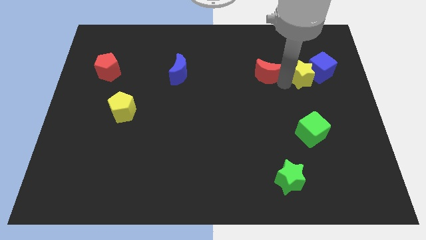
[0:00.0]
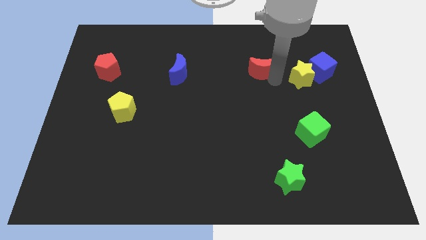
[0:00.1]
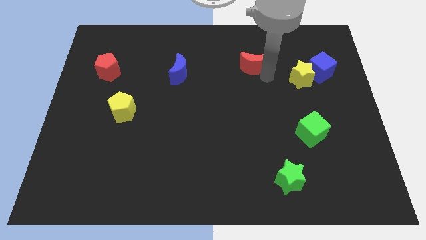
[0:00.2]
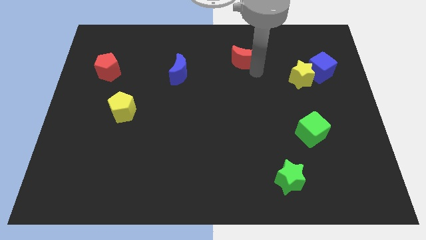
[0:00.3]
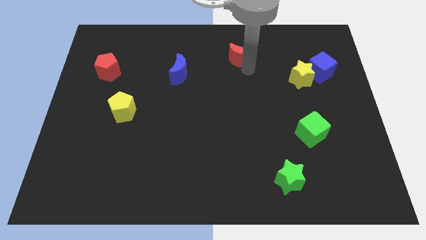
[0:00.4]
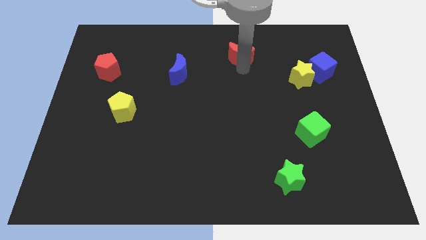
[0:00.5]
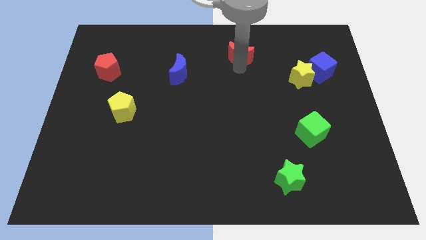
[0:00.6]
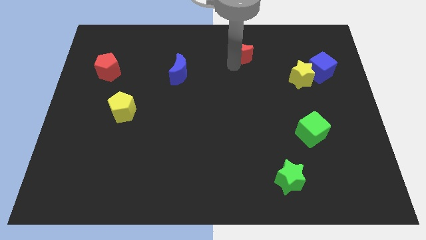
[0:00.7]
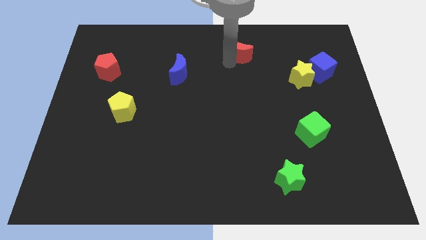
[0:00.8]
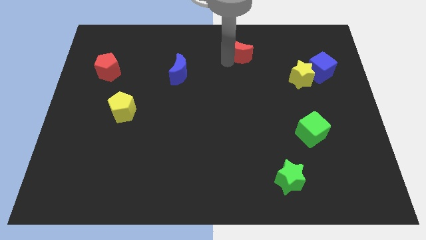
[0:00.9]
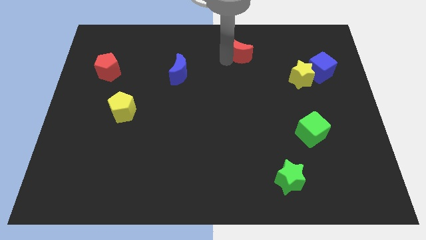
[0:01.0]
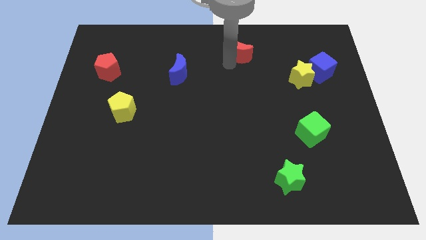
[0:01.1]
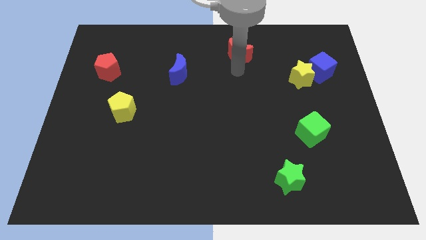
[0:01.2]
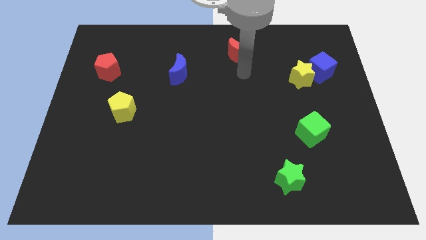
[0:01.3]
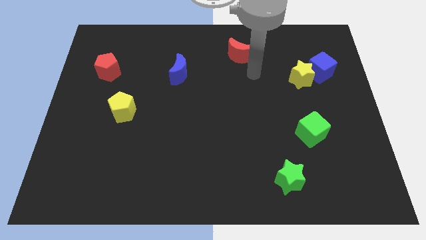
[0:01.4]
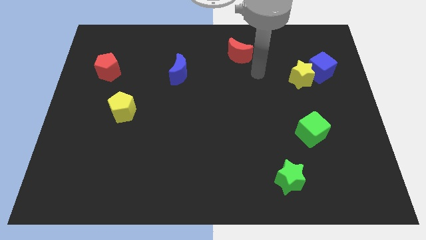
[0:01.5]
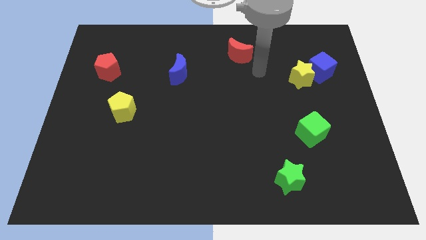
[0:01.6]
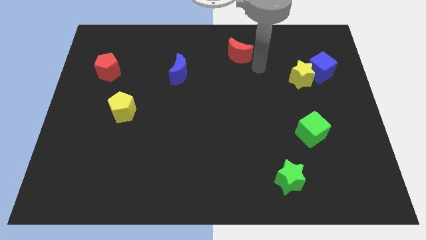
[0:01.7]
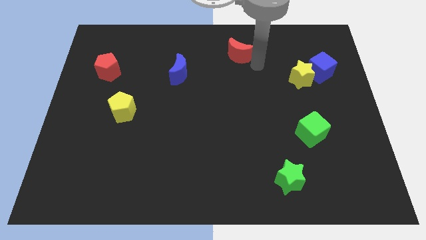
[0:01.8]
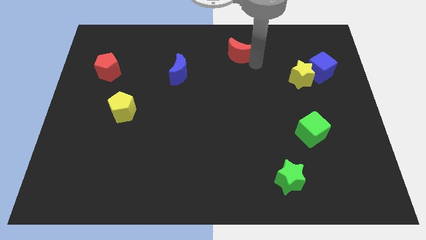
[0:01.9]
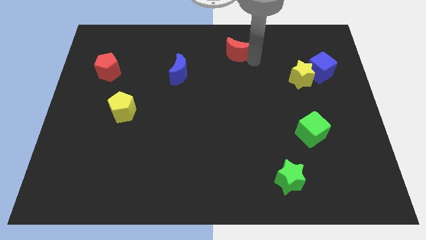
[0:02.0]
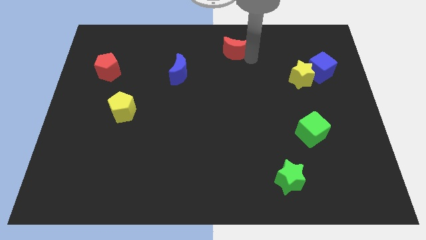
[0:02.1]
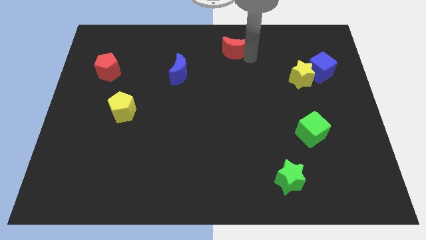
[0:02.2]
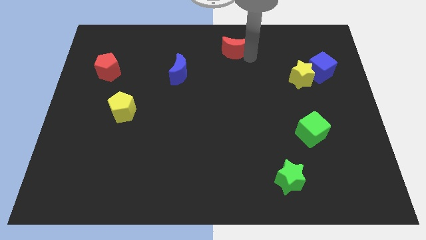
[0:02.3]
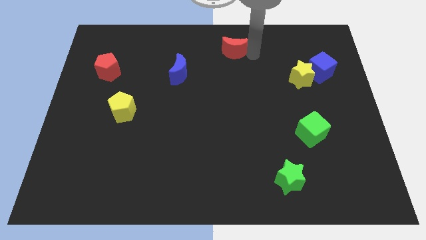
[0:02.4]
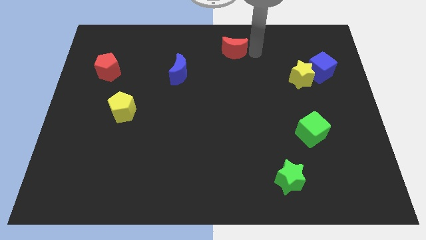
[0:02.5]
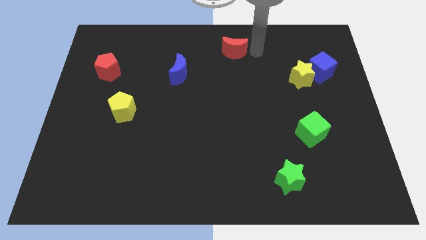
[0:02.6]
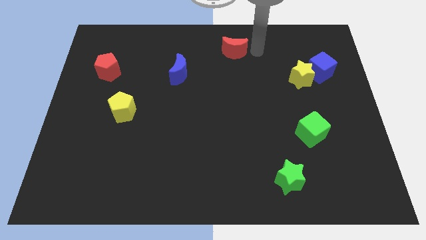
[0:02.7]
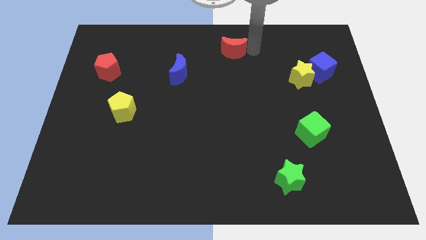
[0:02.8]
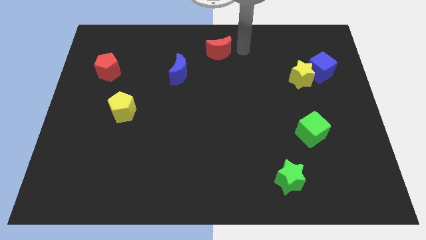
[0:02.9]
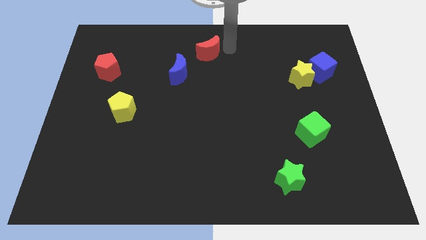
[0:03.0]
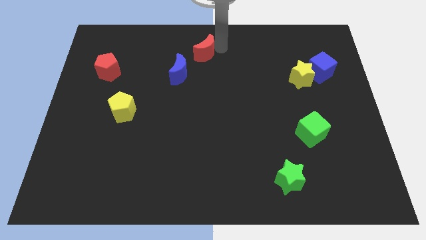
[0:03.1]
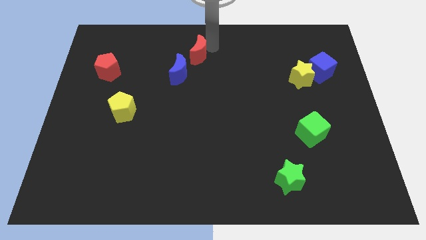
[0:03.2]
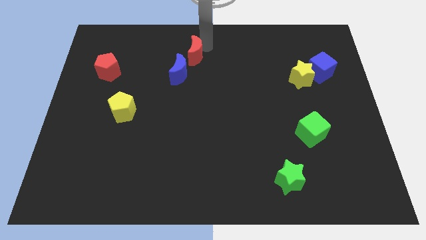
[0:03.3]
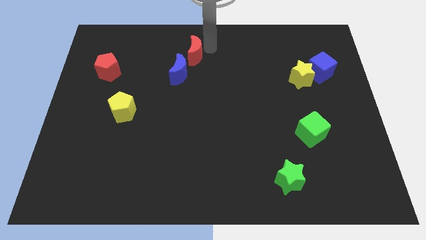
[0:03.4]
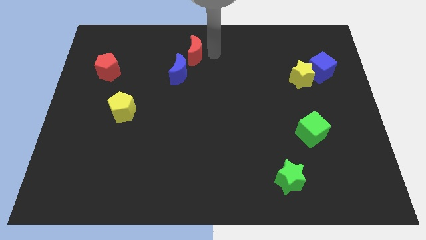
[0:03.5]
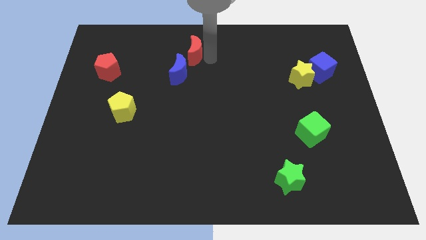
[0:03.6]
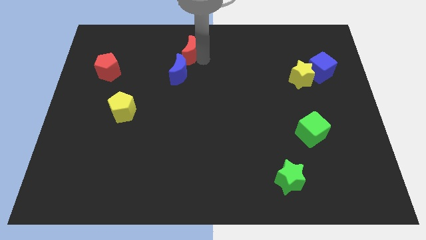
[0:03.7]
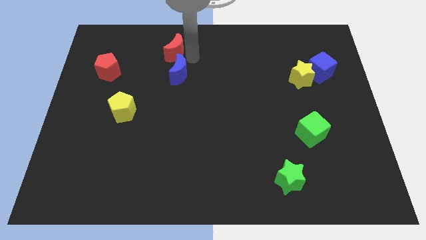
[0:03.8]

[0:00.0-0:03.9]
push the red crescent to the top left side of the blue crescent

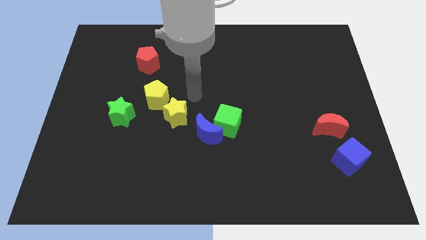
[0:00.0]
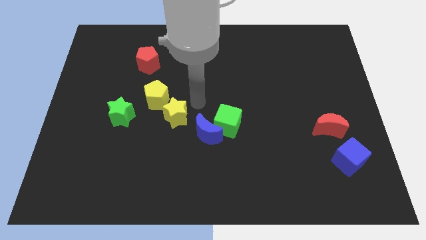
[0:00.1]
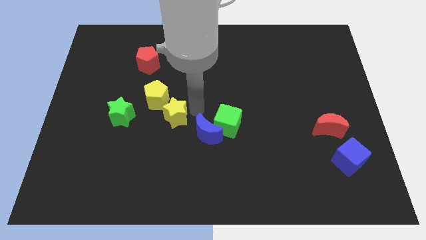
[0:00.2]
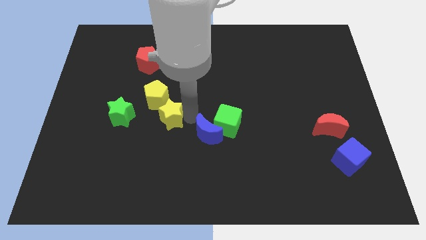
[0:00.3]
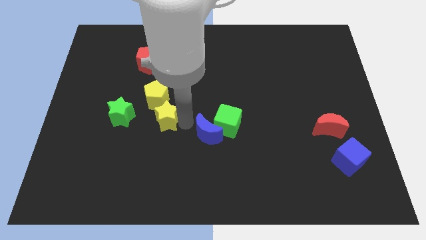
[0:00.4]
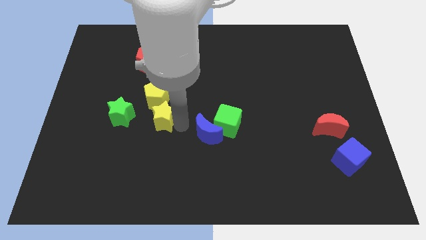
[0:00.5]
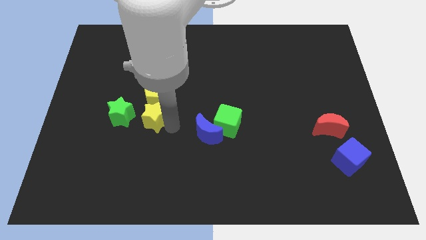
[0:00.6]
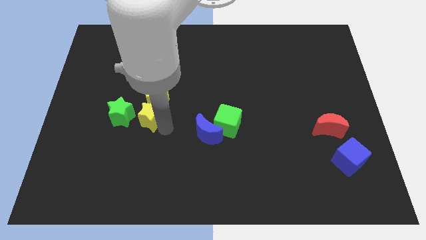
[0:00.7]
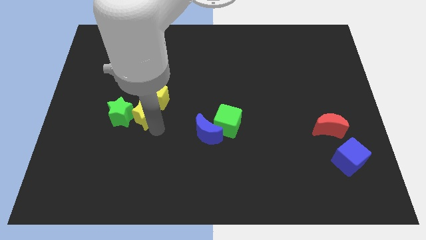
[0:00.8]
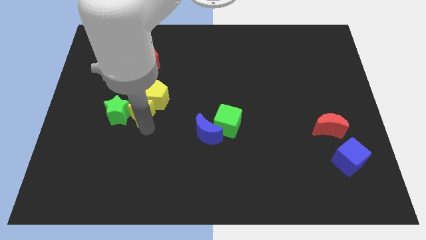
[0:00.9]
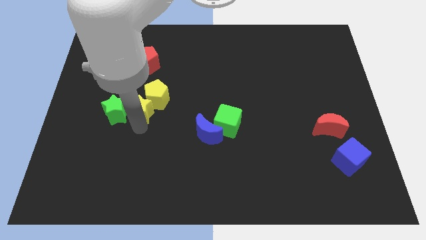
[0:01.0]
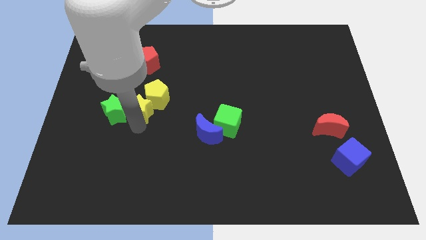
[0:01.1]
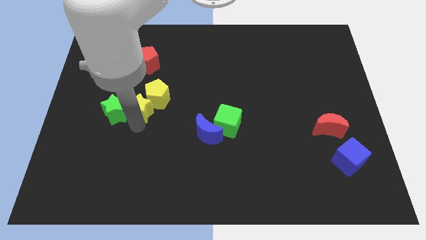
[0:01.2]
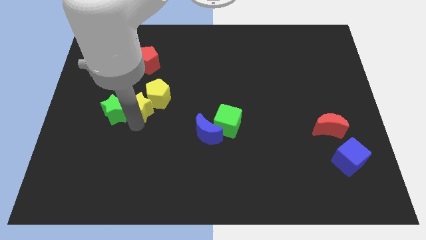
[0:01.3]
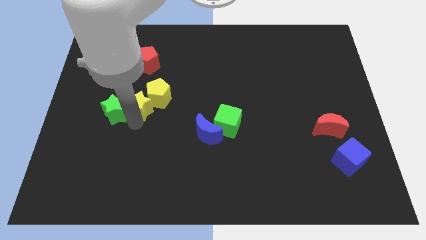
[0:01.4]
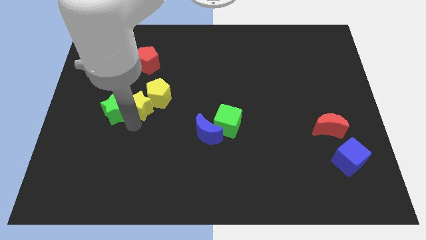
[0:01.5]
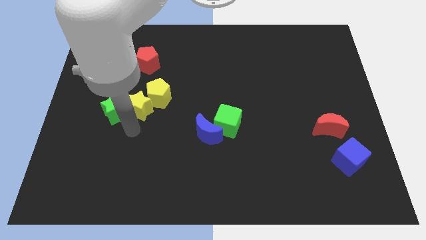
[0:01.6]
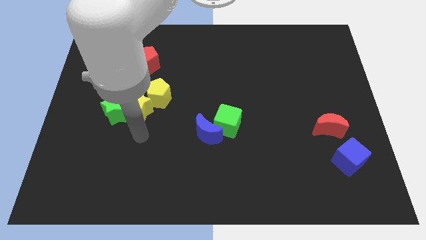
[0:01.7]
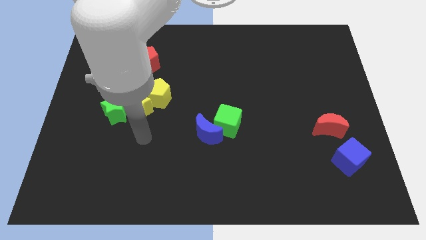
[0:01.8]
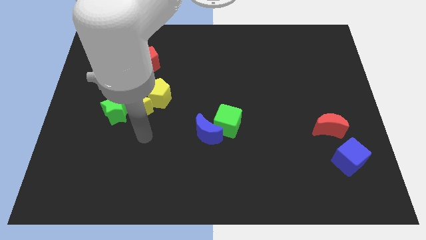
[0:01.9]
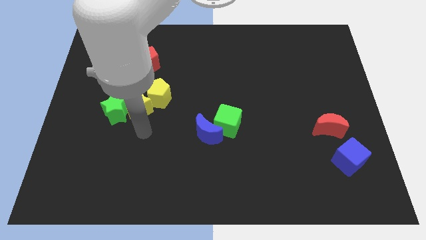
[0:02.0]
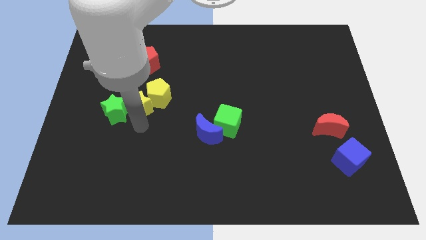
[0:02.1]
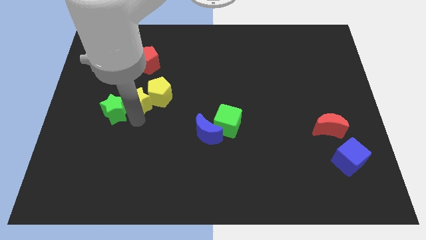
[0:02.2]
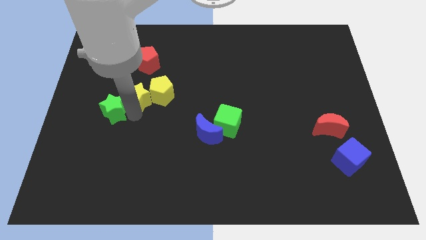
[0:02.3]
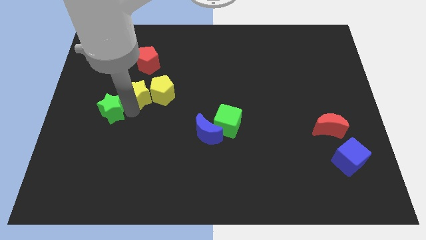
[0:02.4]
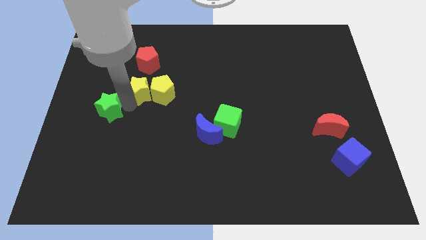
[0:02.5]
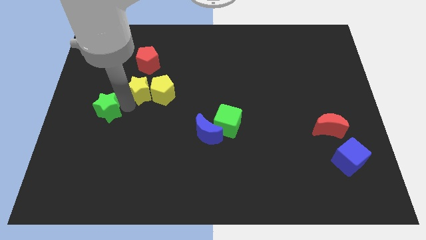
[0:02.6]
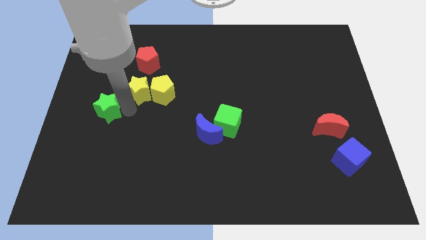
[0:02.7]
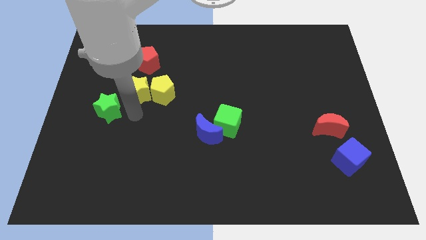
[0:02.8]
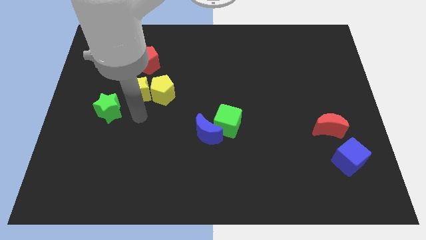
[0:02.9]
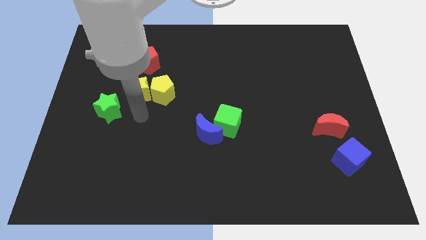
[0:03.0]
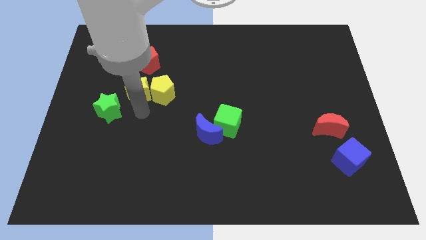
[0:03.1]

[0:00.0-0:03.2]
move the yellow star left to the yellow pentagon

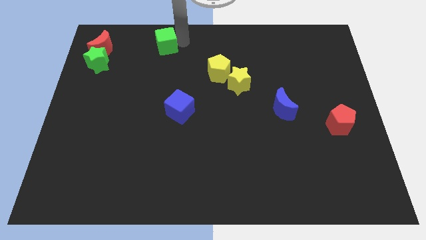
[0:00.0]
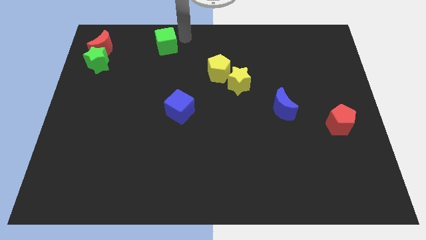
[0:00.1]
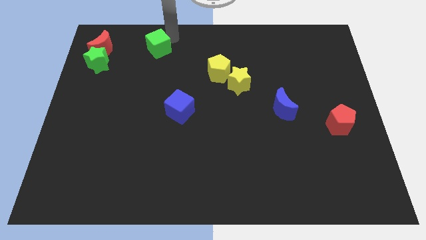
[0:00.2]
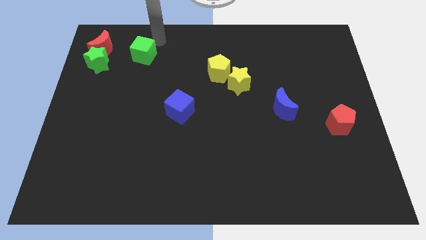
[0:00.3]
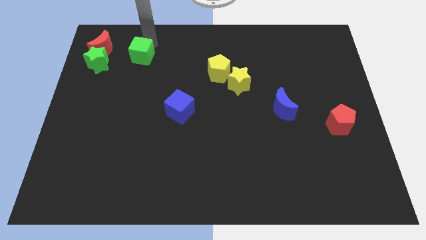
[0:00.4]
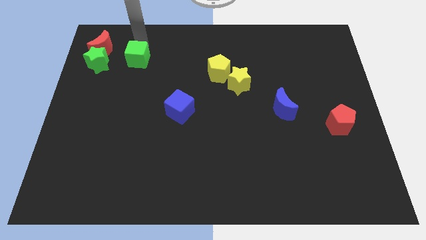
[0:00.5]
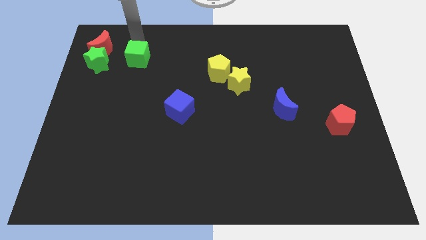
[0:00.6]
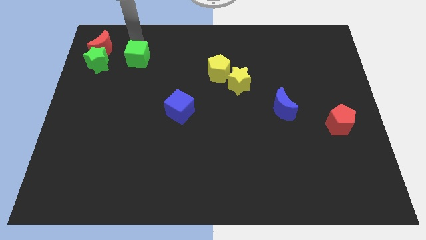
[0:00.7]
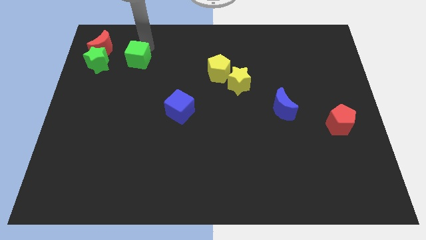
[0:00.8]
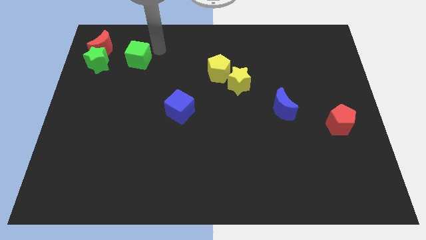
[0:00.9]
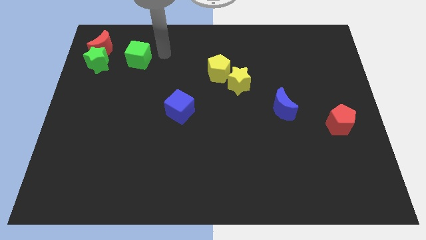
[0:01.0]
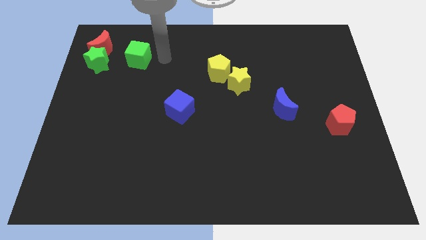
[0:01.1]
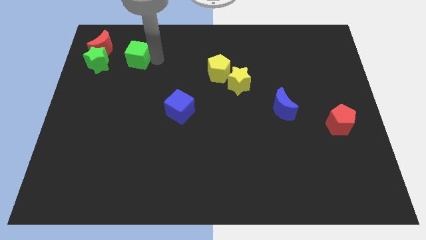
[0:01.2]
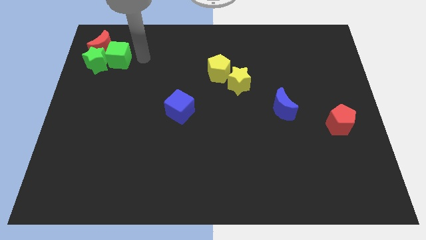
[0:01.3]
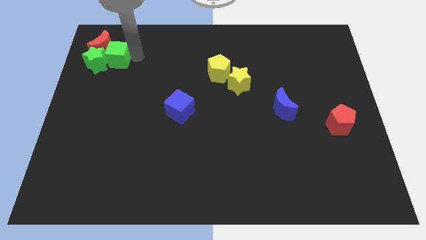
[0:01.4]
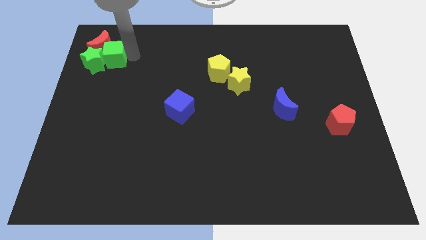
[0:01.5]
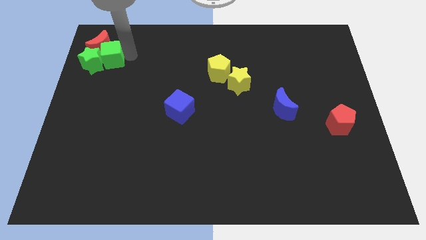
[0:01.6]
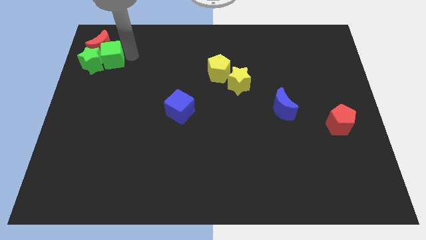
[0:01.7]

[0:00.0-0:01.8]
push green cube into the green star
